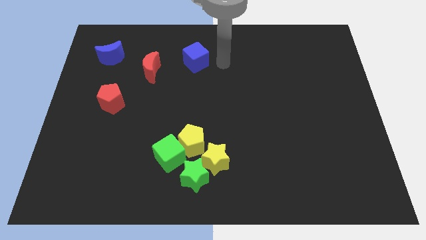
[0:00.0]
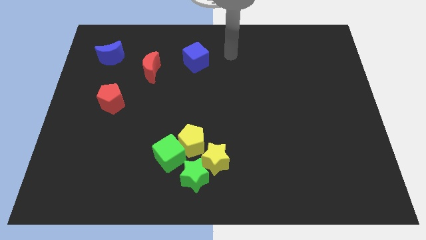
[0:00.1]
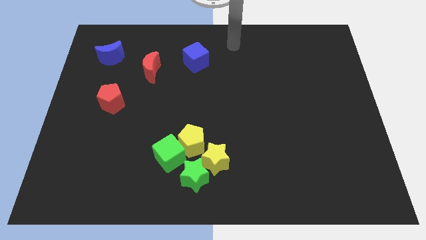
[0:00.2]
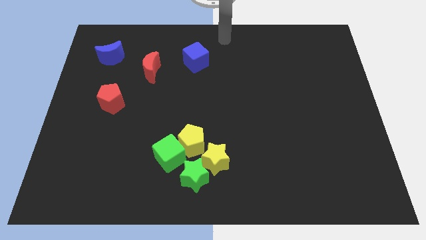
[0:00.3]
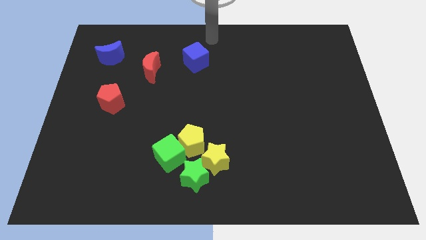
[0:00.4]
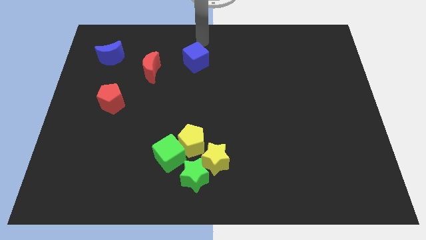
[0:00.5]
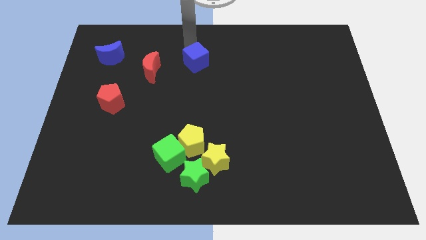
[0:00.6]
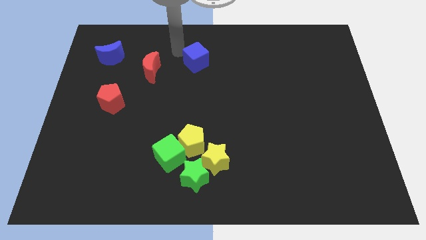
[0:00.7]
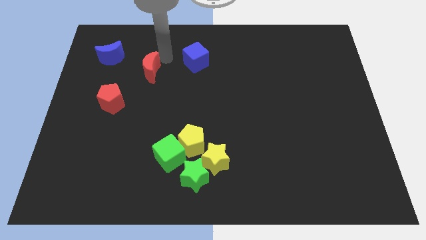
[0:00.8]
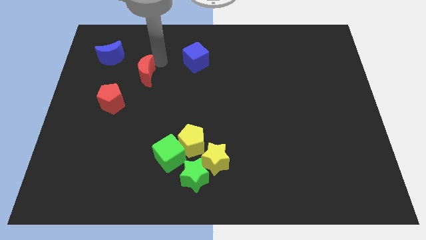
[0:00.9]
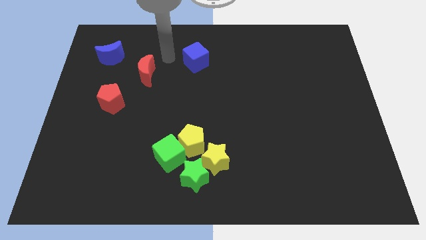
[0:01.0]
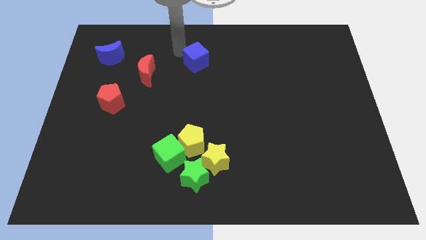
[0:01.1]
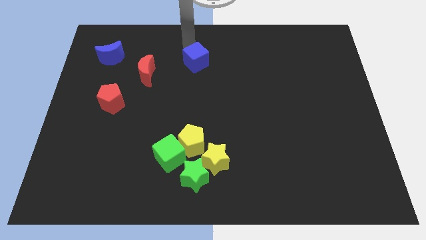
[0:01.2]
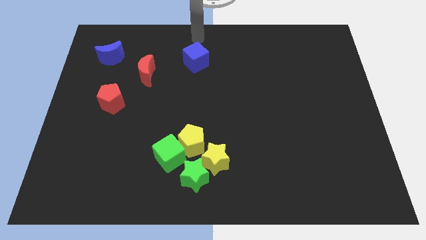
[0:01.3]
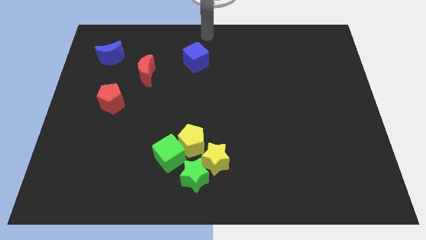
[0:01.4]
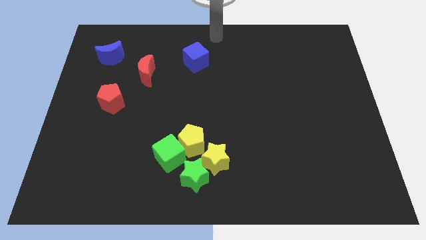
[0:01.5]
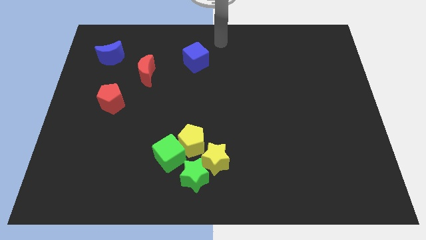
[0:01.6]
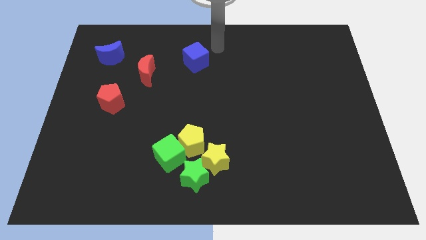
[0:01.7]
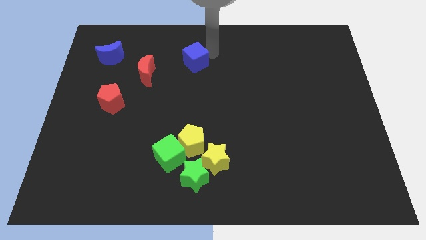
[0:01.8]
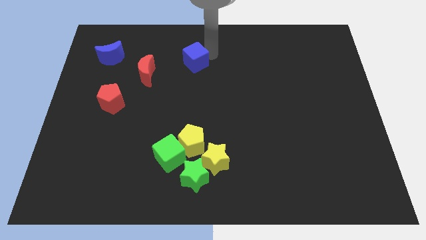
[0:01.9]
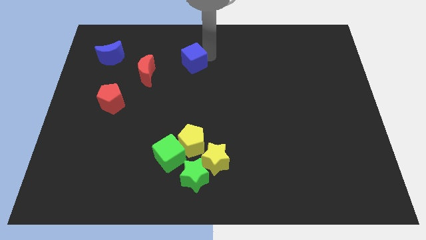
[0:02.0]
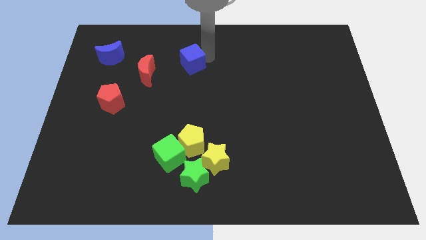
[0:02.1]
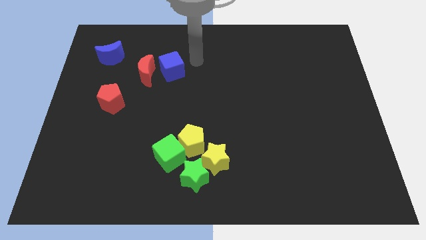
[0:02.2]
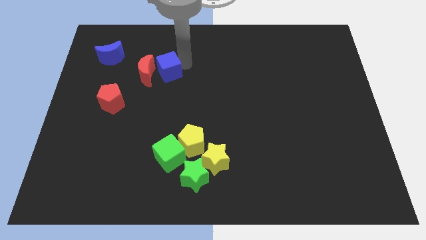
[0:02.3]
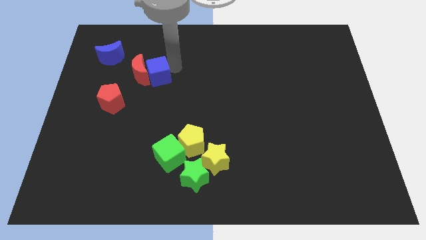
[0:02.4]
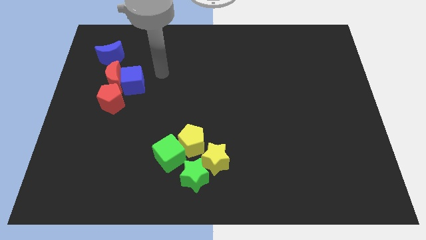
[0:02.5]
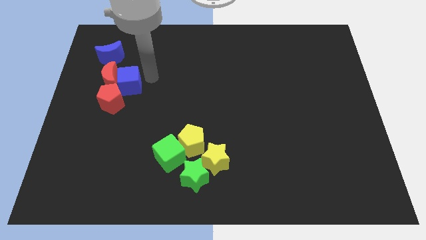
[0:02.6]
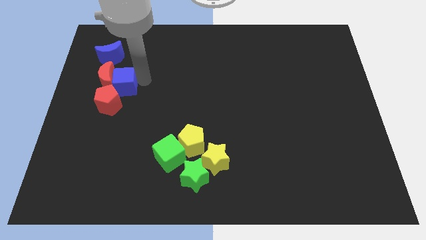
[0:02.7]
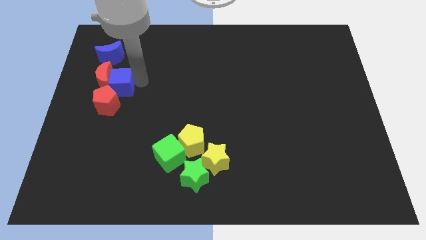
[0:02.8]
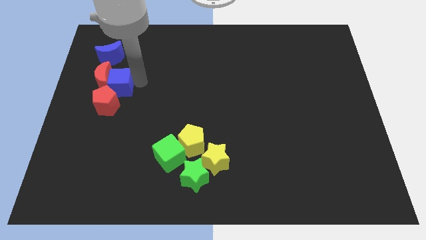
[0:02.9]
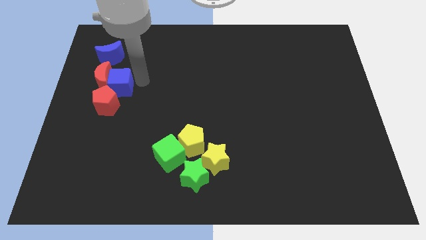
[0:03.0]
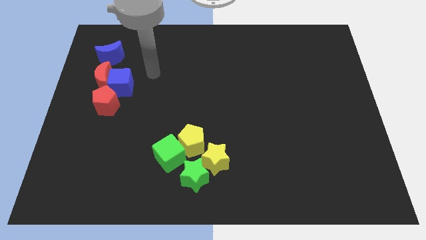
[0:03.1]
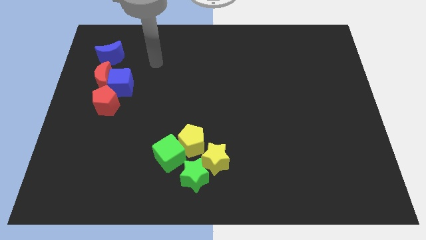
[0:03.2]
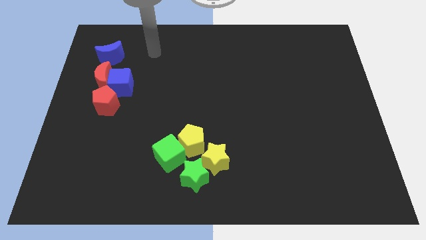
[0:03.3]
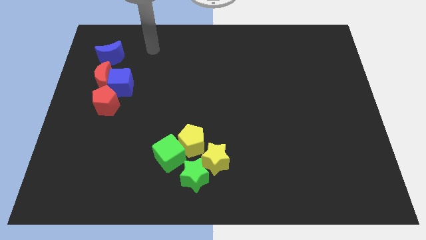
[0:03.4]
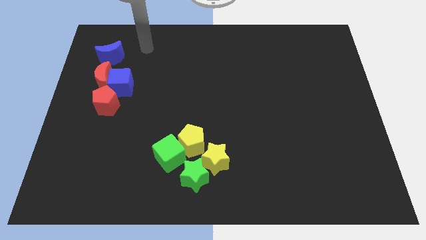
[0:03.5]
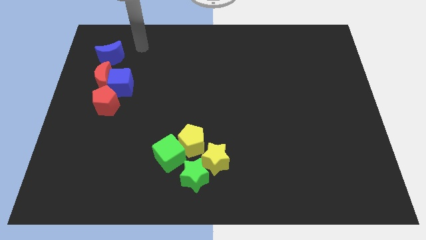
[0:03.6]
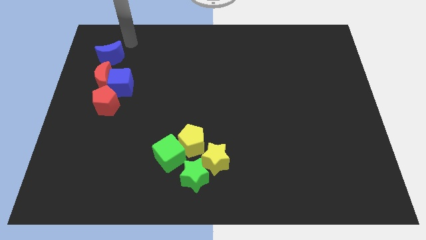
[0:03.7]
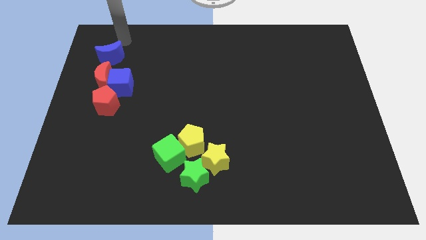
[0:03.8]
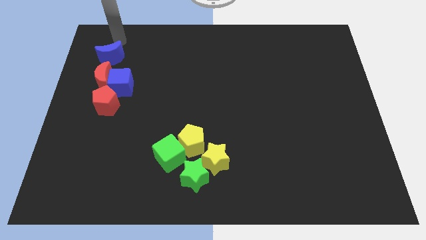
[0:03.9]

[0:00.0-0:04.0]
push the blue cube into the red crescent

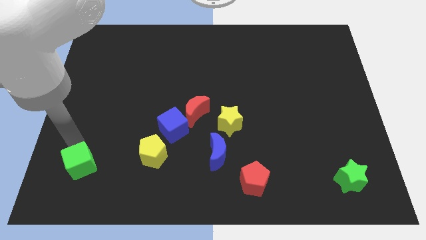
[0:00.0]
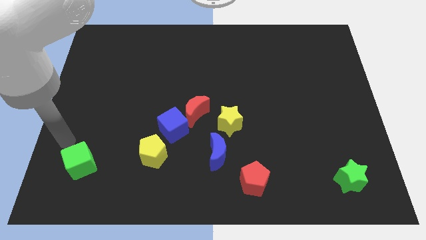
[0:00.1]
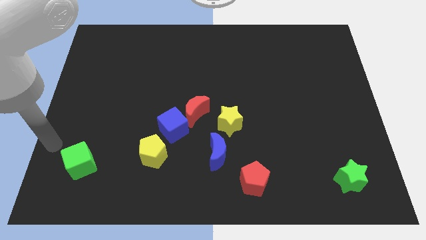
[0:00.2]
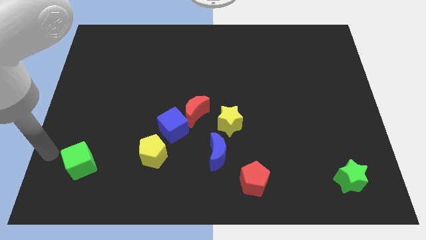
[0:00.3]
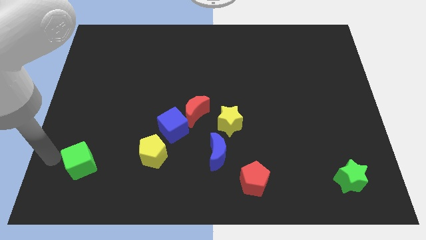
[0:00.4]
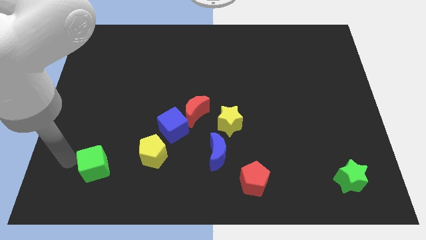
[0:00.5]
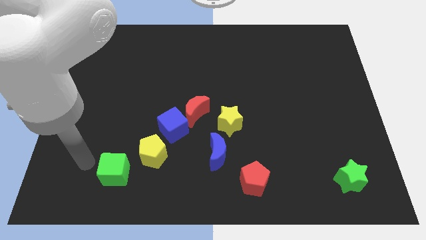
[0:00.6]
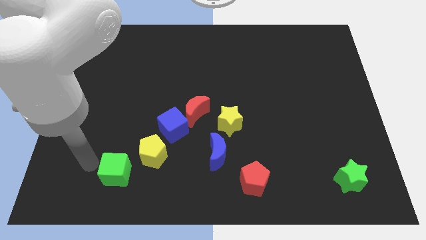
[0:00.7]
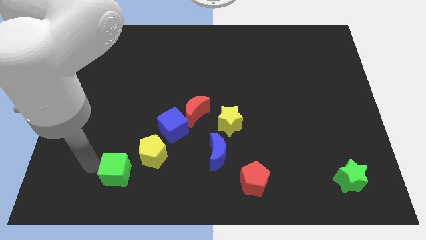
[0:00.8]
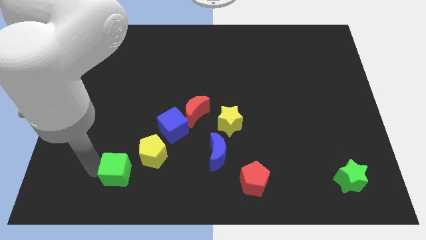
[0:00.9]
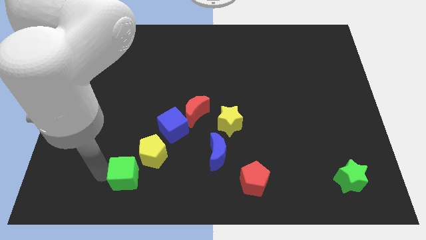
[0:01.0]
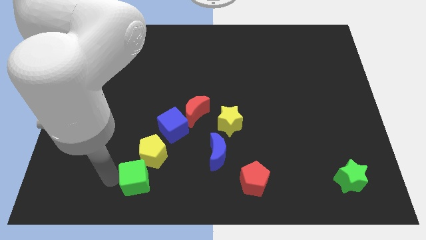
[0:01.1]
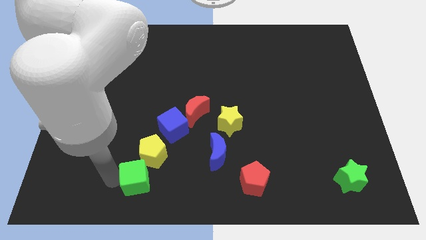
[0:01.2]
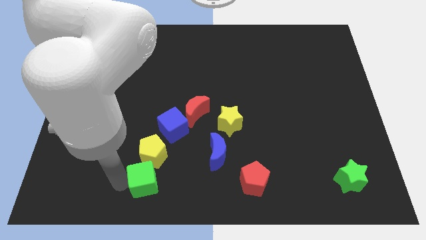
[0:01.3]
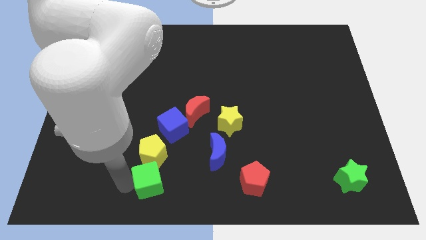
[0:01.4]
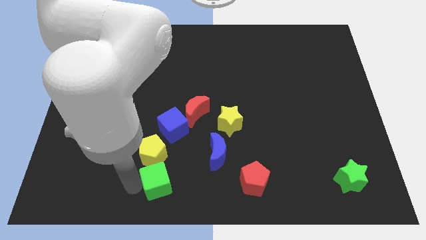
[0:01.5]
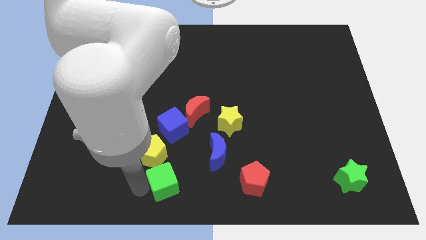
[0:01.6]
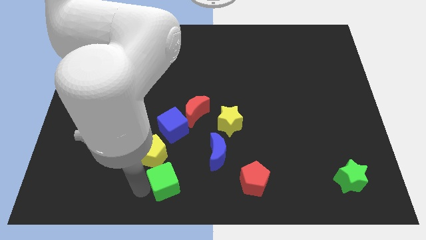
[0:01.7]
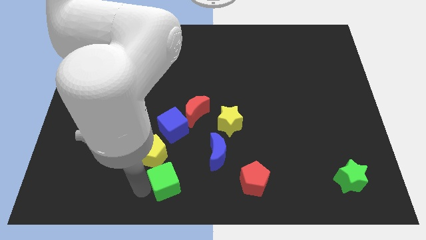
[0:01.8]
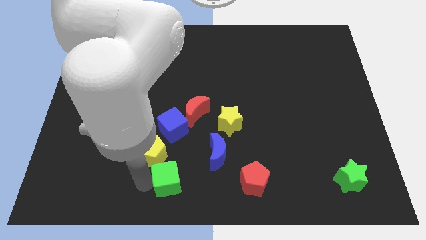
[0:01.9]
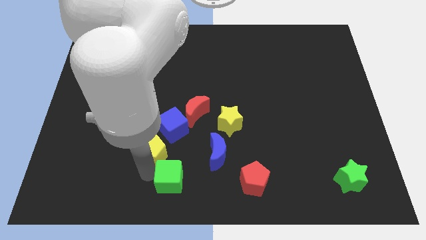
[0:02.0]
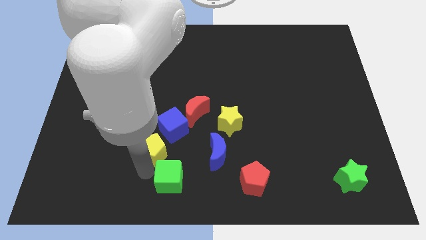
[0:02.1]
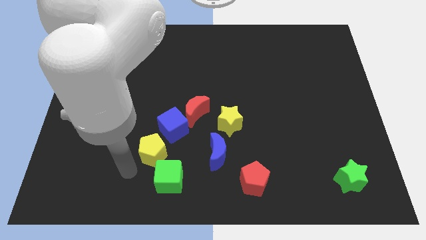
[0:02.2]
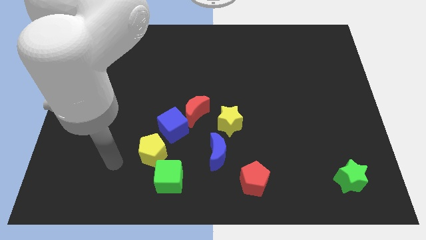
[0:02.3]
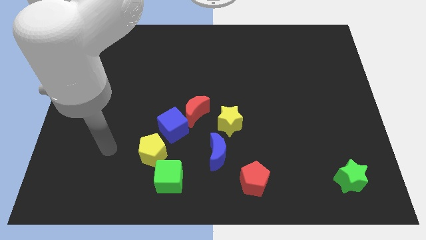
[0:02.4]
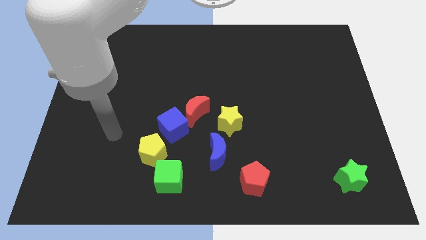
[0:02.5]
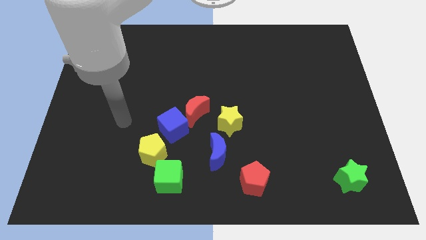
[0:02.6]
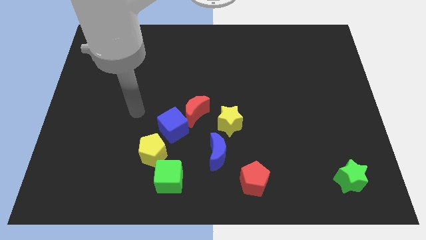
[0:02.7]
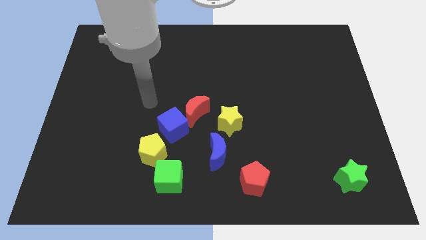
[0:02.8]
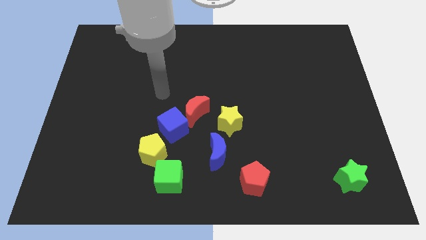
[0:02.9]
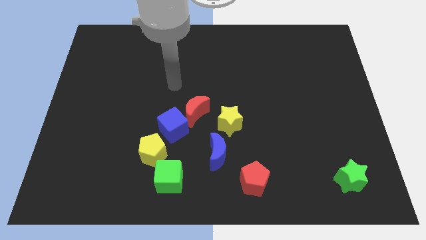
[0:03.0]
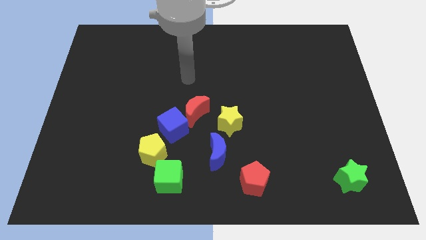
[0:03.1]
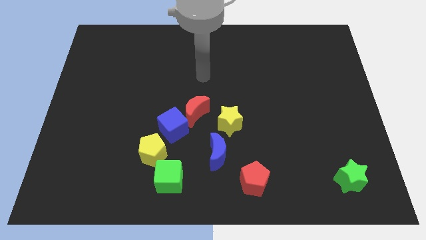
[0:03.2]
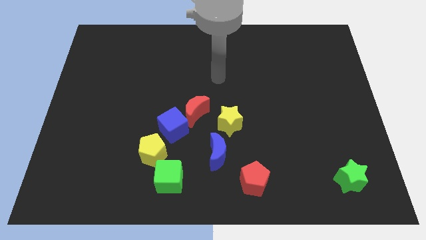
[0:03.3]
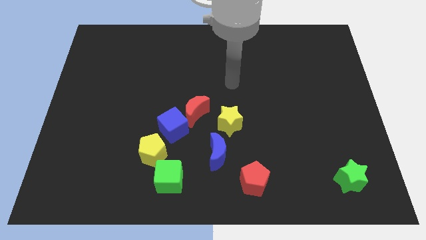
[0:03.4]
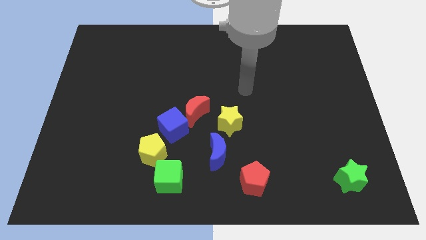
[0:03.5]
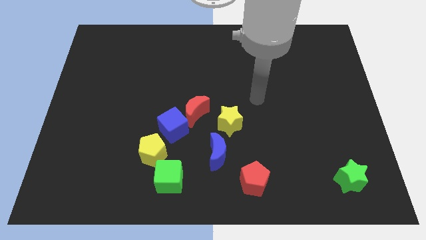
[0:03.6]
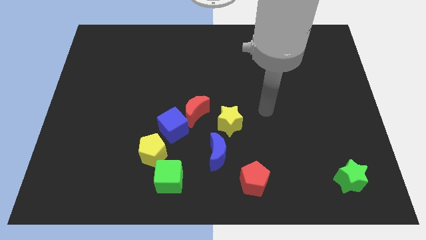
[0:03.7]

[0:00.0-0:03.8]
drag the green cube and place it below the yellow pentagon

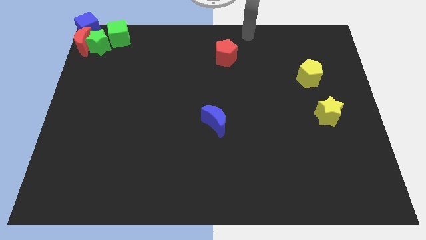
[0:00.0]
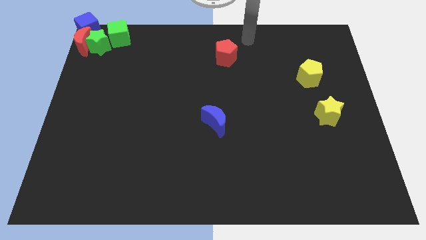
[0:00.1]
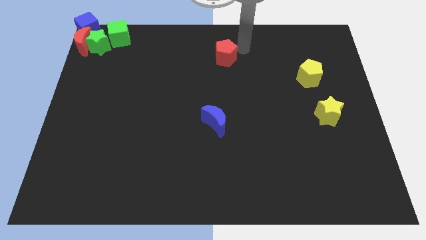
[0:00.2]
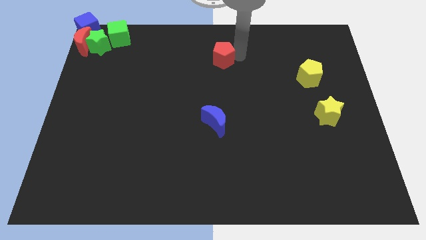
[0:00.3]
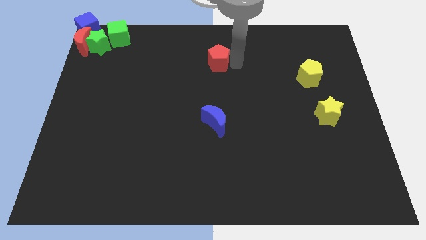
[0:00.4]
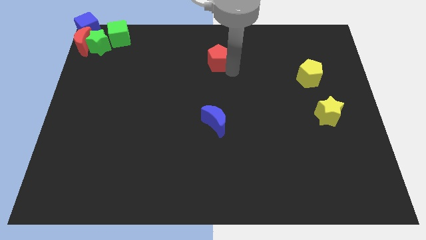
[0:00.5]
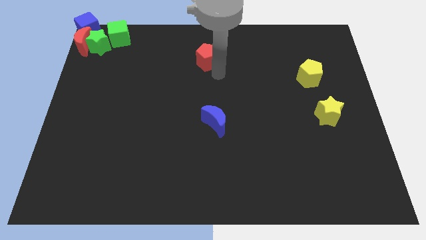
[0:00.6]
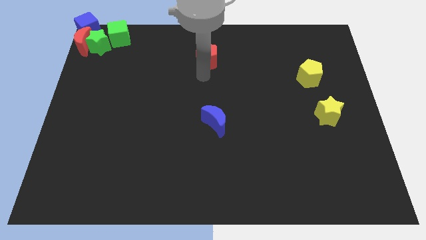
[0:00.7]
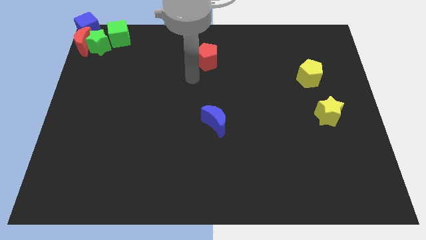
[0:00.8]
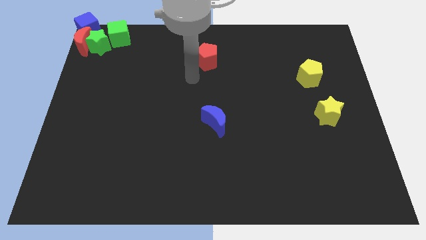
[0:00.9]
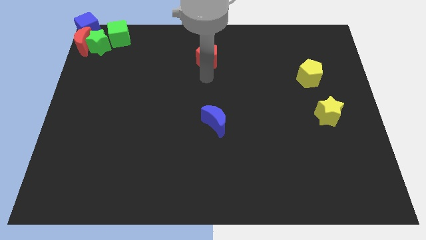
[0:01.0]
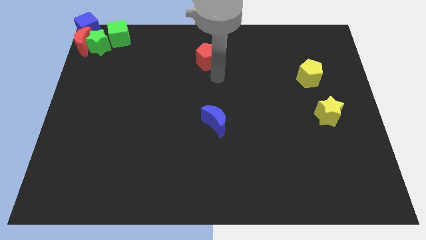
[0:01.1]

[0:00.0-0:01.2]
drag the red pentagon above the blue moon

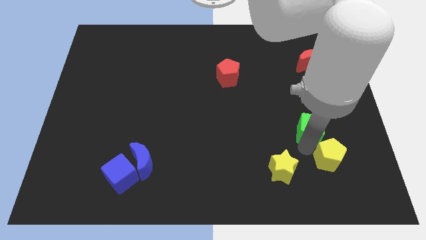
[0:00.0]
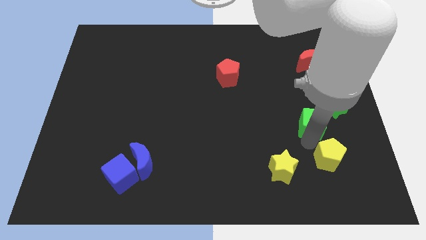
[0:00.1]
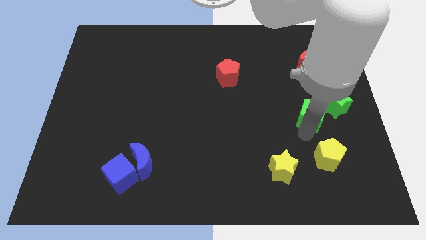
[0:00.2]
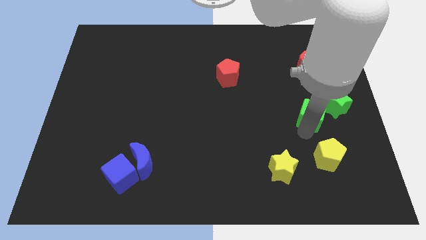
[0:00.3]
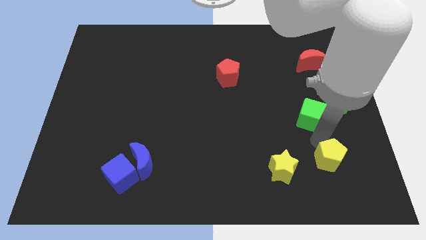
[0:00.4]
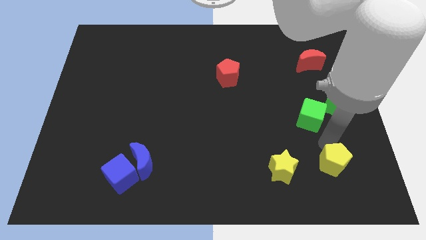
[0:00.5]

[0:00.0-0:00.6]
separate green cube from yellow pentagon
